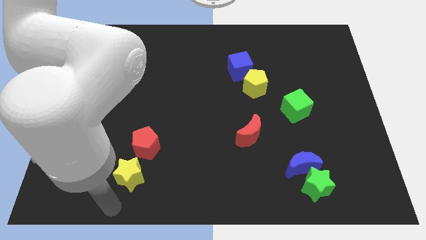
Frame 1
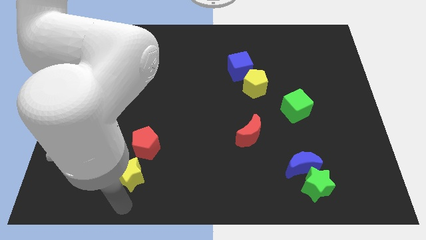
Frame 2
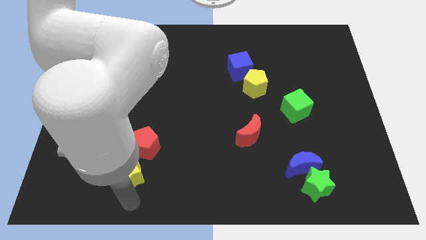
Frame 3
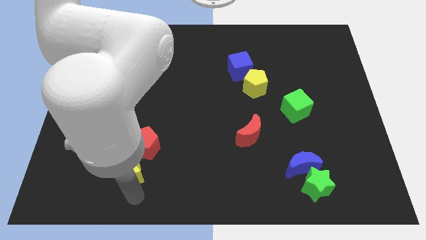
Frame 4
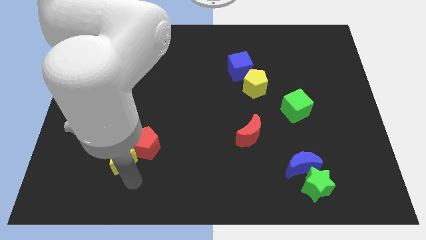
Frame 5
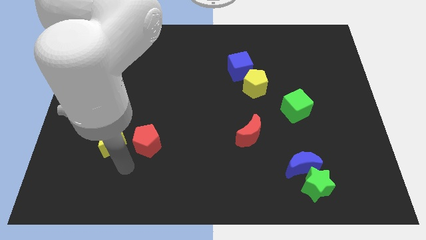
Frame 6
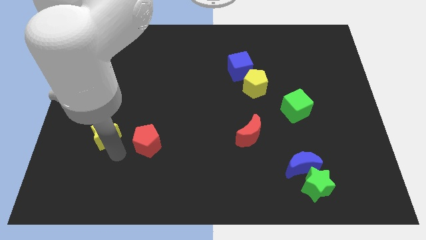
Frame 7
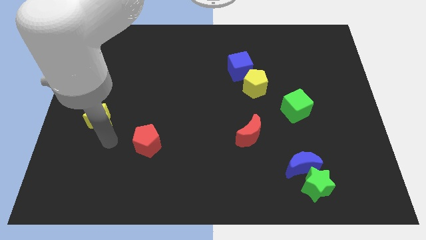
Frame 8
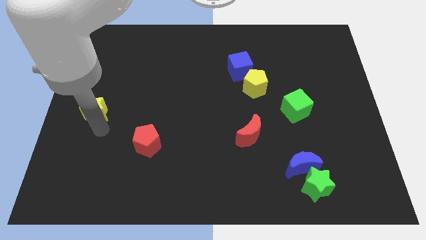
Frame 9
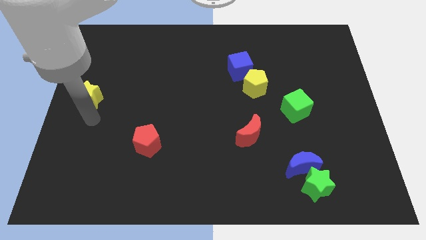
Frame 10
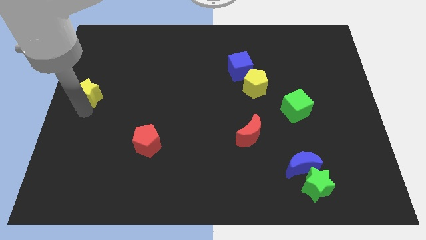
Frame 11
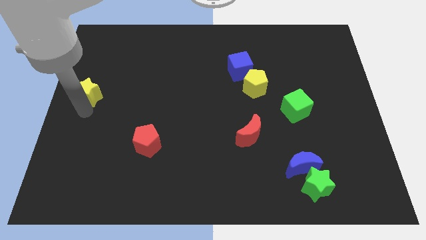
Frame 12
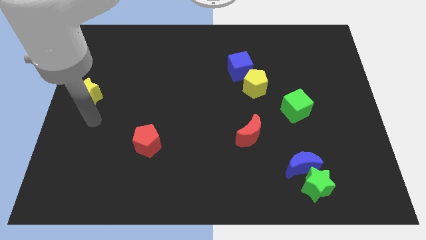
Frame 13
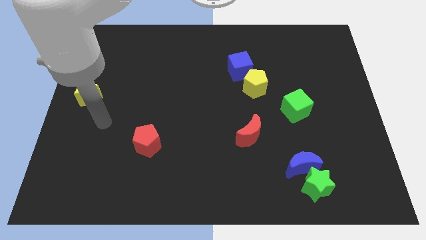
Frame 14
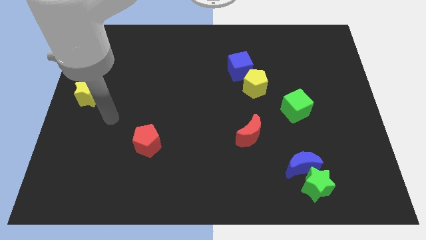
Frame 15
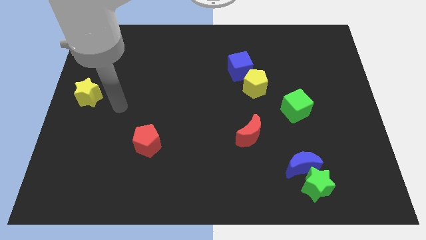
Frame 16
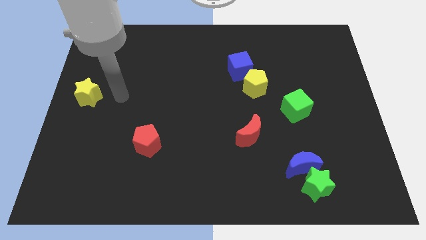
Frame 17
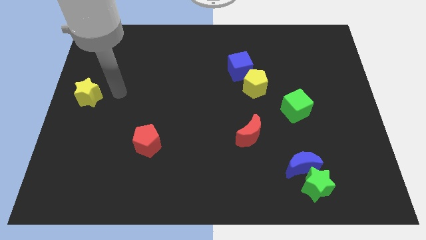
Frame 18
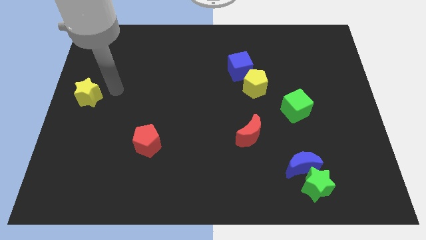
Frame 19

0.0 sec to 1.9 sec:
drag the yellow star diagonally top left to the red pentagon

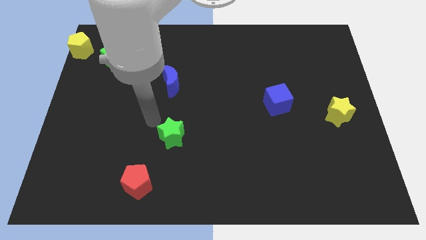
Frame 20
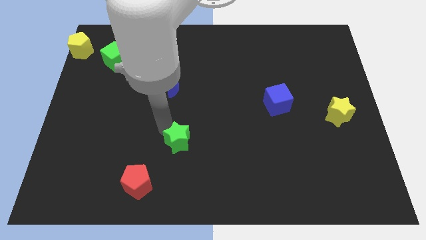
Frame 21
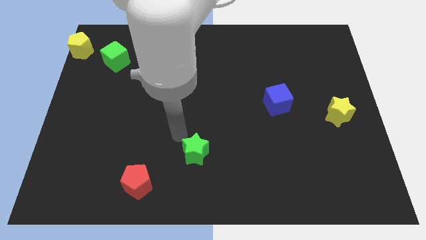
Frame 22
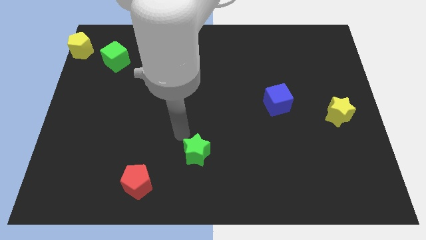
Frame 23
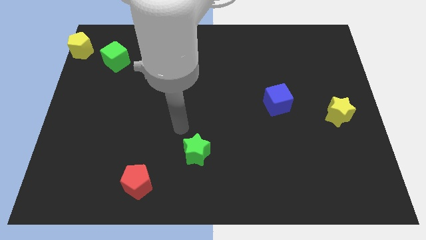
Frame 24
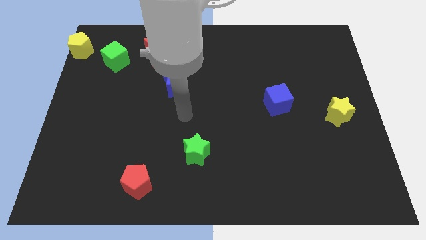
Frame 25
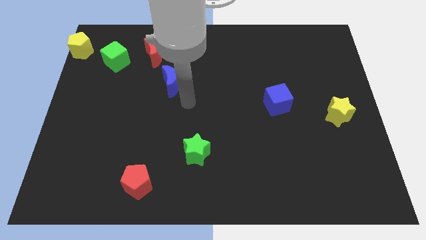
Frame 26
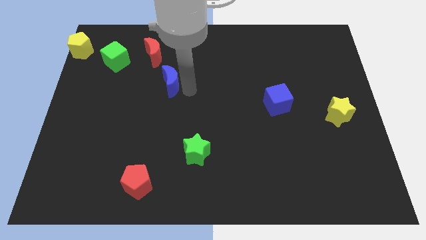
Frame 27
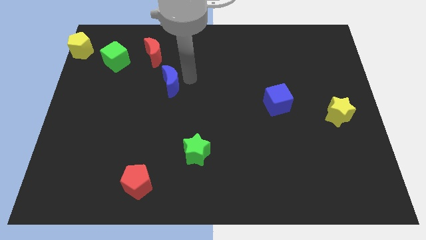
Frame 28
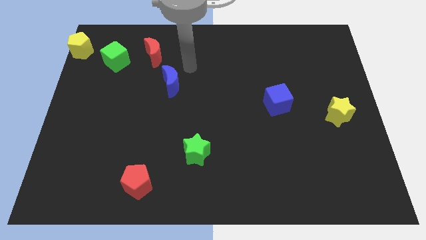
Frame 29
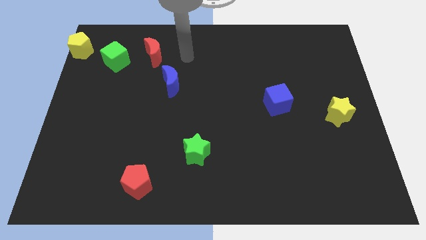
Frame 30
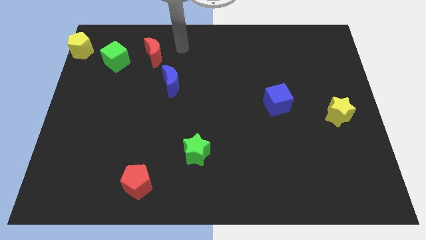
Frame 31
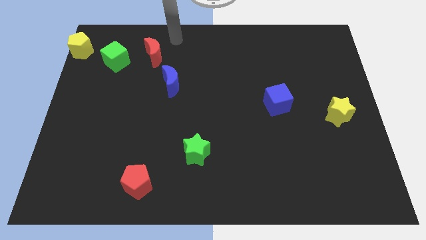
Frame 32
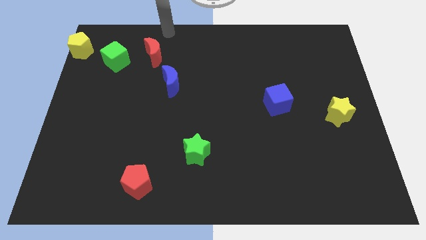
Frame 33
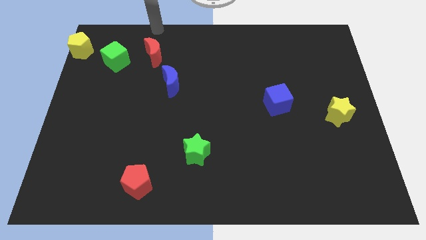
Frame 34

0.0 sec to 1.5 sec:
push the green star diagonally top right to the red penatgon

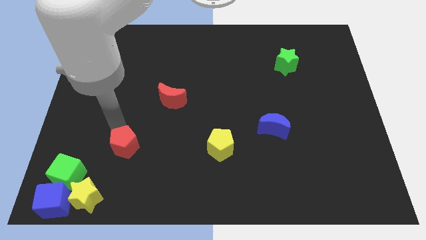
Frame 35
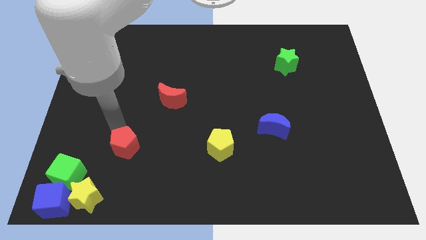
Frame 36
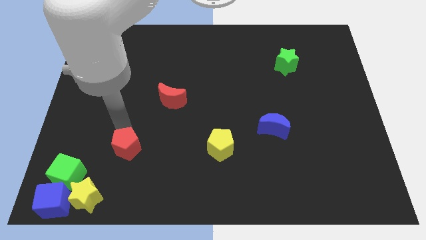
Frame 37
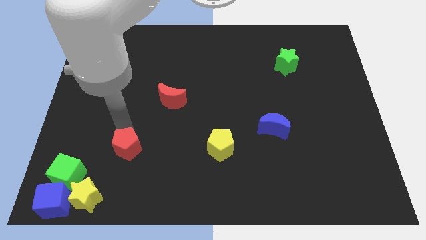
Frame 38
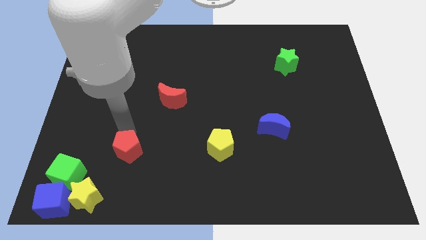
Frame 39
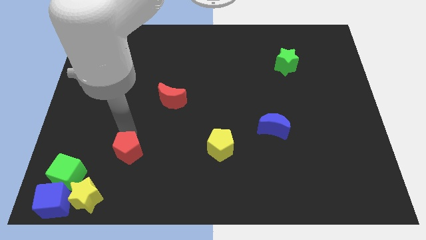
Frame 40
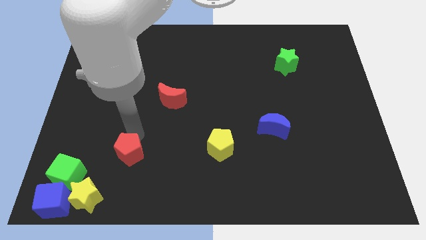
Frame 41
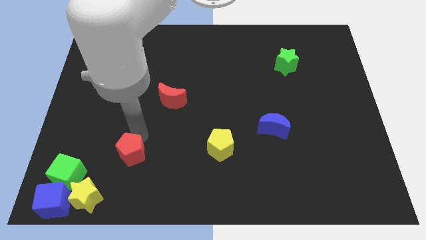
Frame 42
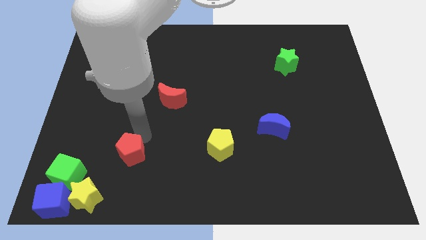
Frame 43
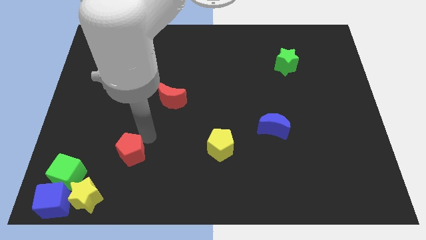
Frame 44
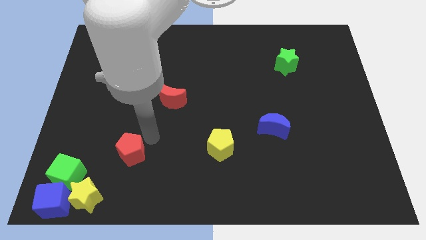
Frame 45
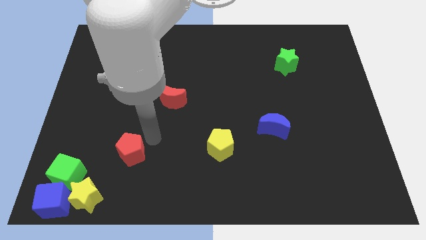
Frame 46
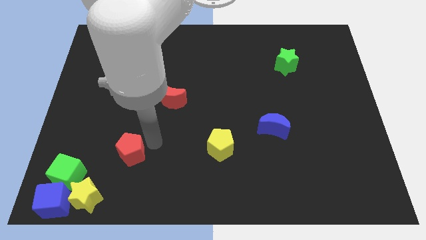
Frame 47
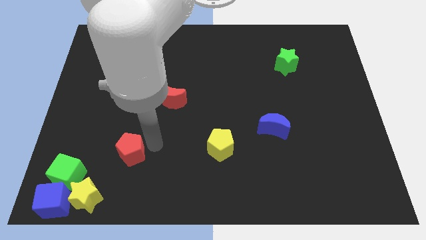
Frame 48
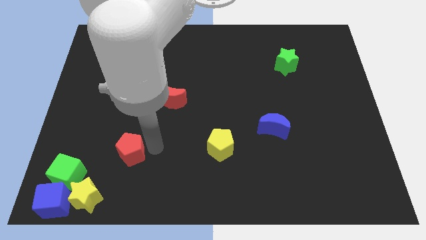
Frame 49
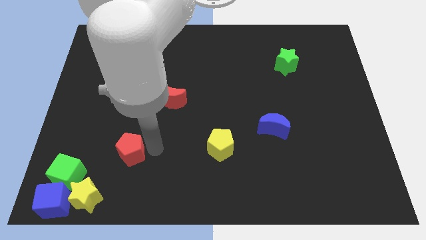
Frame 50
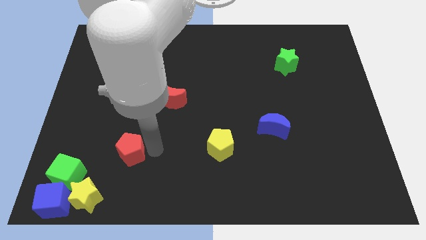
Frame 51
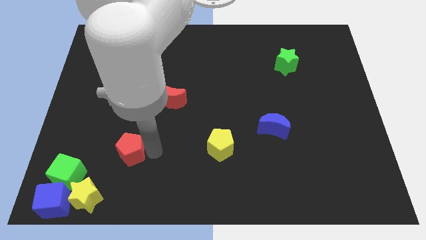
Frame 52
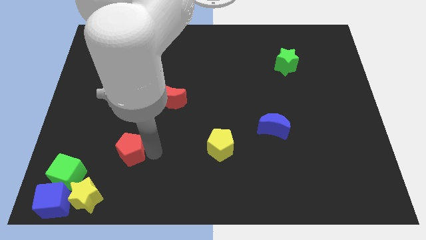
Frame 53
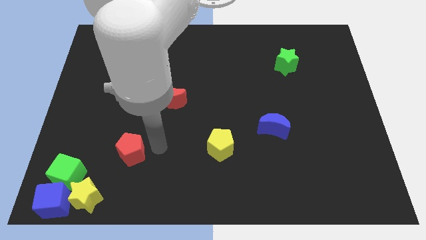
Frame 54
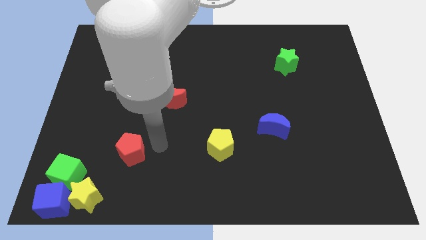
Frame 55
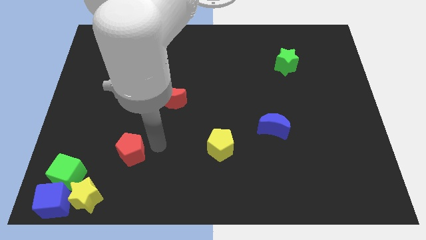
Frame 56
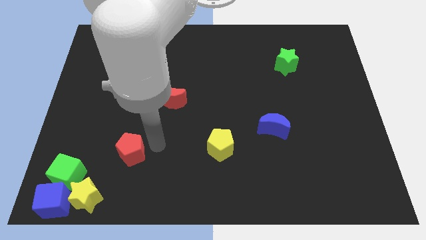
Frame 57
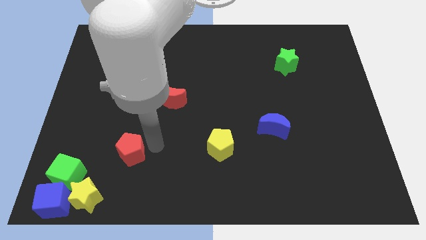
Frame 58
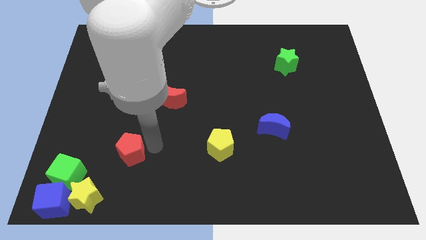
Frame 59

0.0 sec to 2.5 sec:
move the red pentagon slightly to the bottom of the board

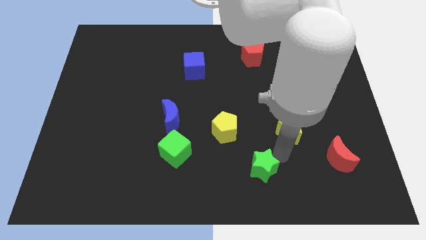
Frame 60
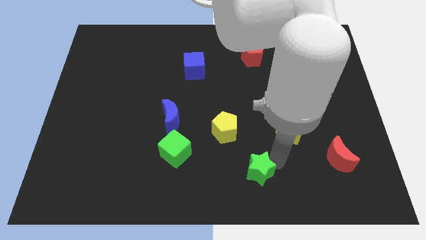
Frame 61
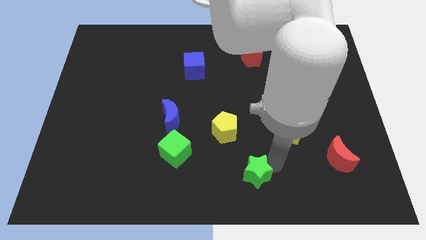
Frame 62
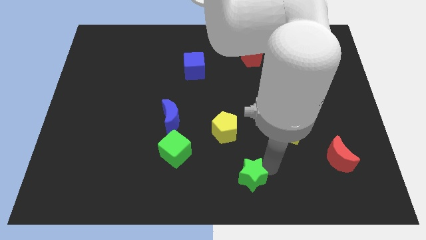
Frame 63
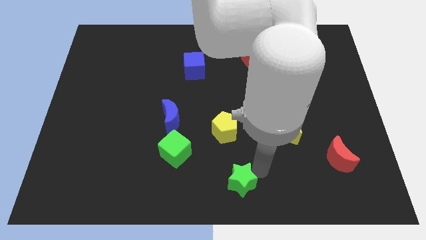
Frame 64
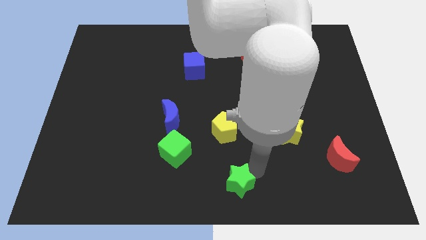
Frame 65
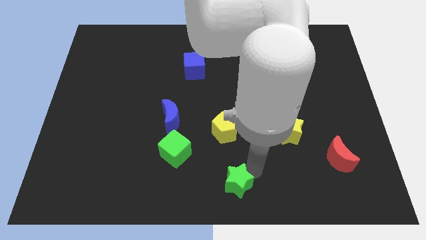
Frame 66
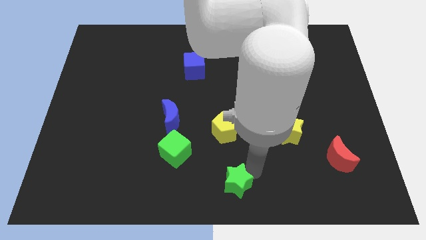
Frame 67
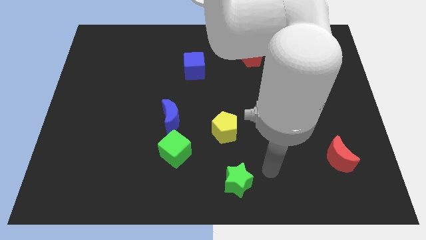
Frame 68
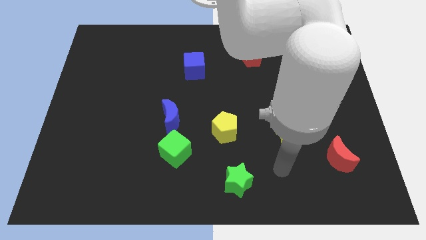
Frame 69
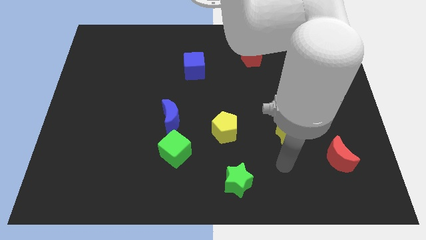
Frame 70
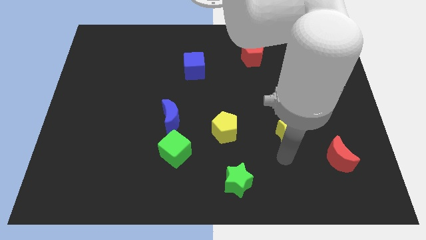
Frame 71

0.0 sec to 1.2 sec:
put the green star at the bottom center

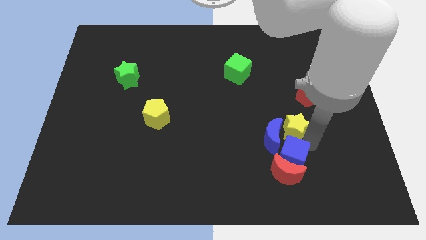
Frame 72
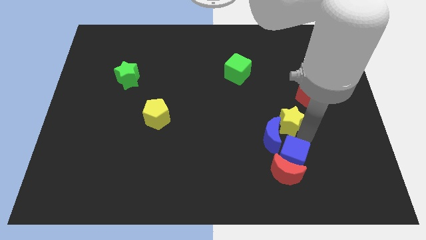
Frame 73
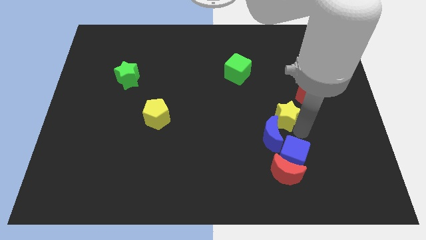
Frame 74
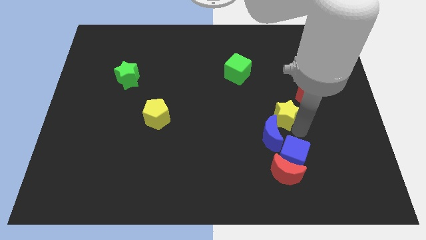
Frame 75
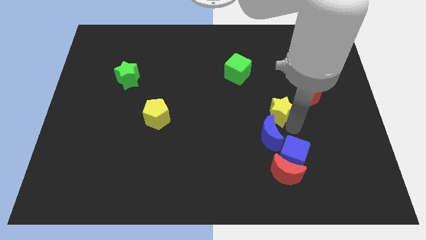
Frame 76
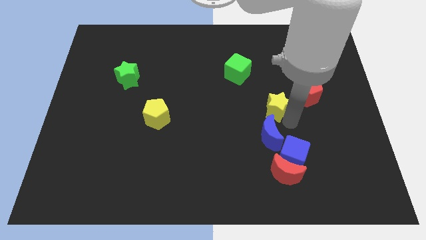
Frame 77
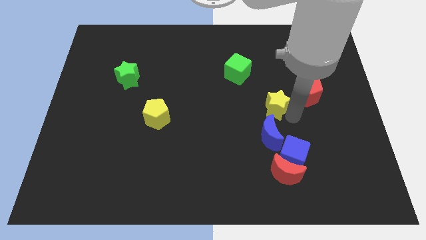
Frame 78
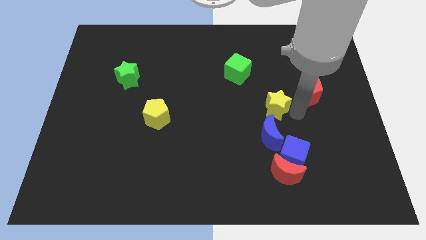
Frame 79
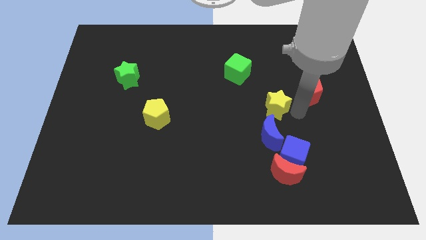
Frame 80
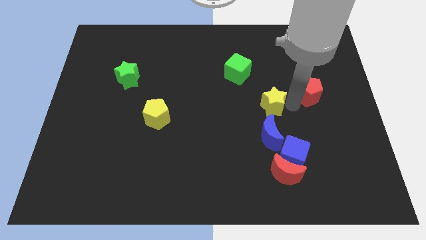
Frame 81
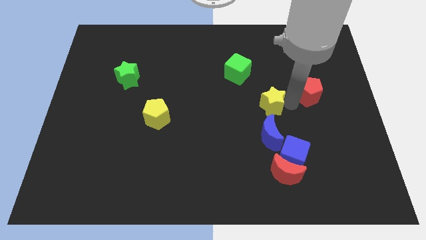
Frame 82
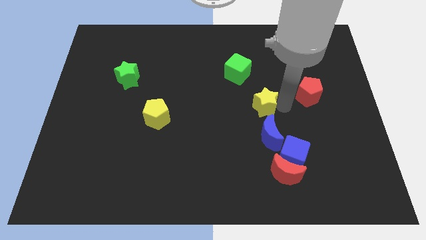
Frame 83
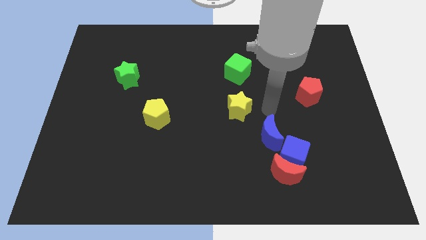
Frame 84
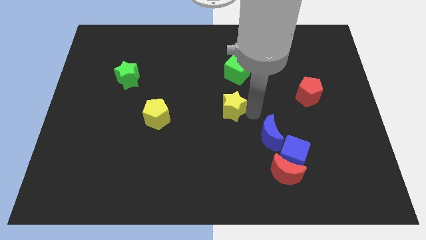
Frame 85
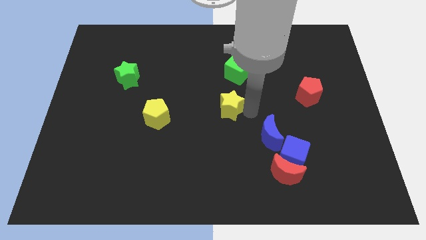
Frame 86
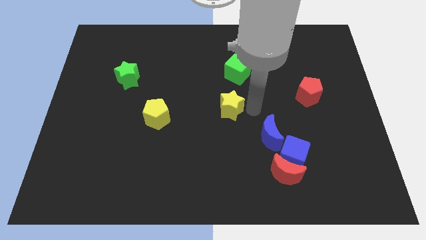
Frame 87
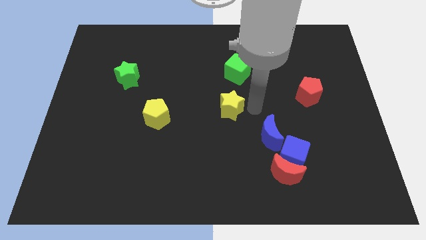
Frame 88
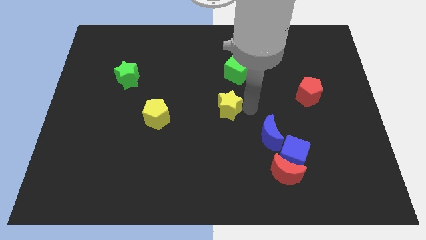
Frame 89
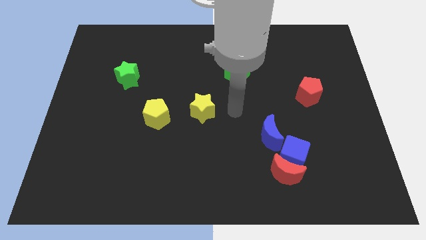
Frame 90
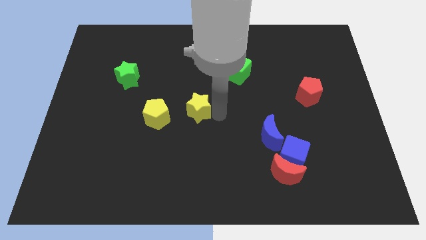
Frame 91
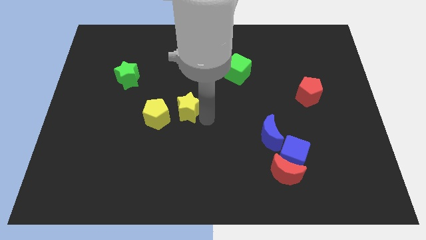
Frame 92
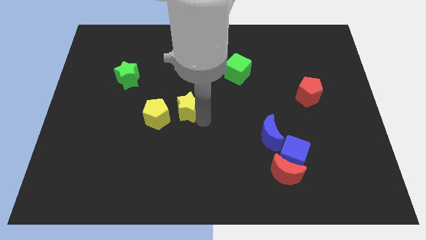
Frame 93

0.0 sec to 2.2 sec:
move the yellow star to the right of the yellow pentagon
